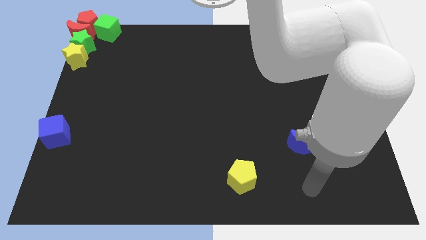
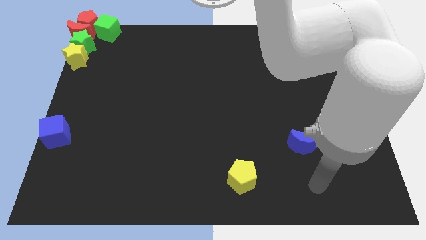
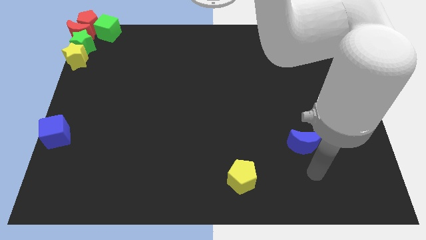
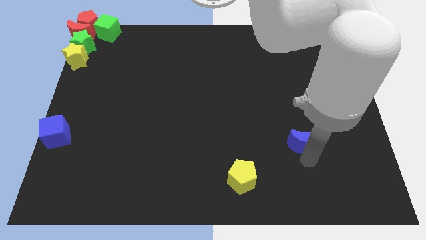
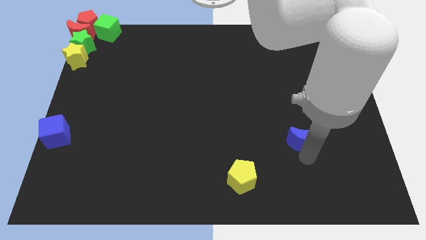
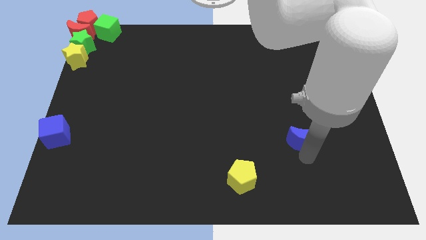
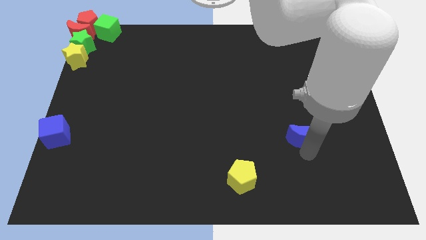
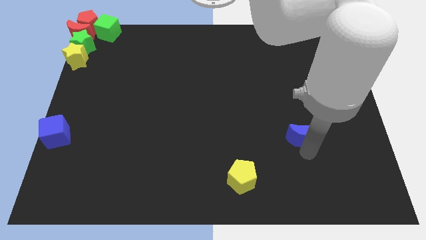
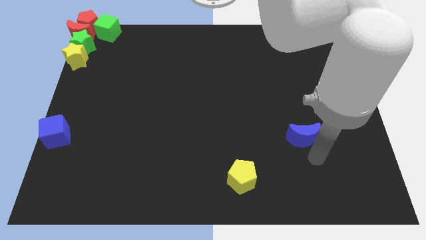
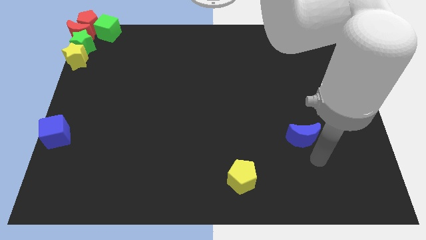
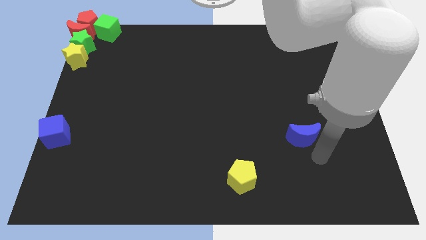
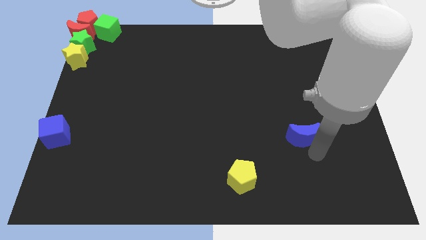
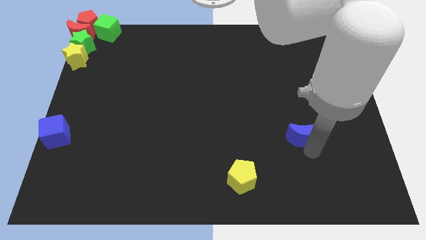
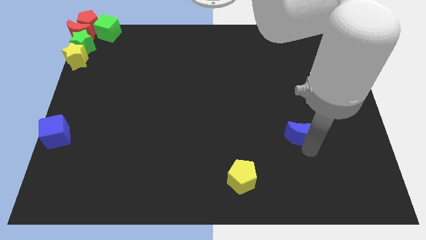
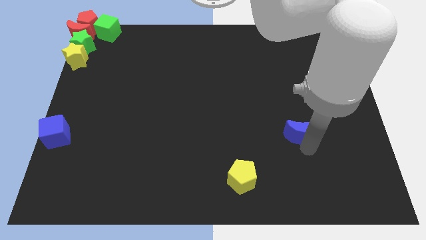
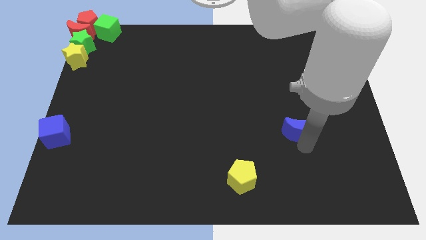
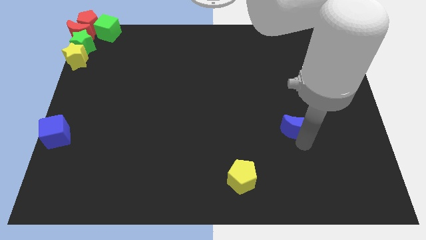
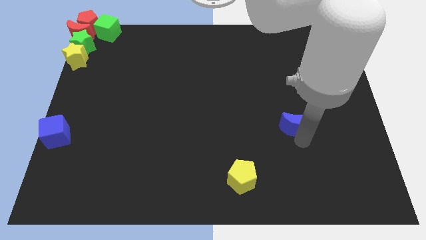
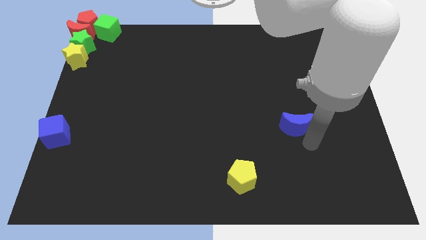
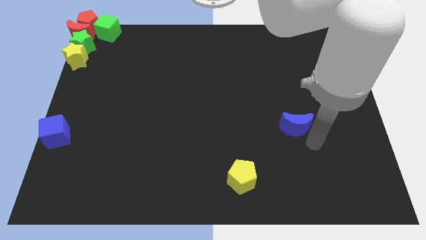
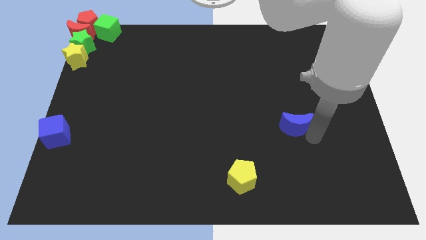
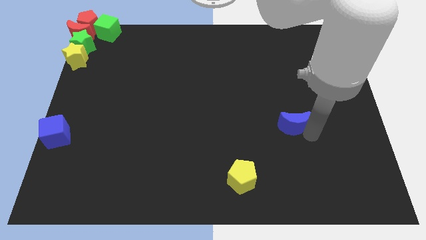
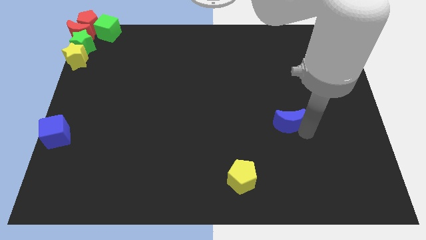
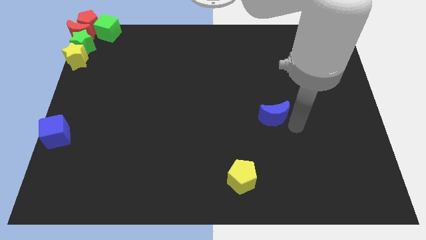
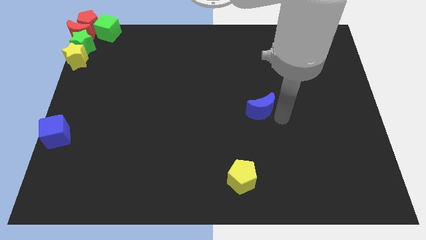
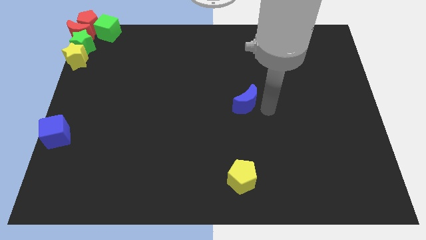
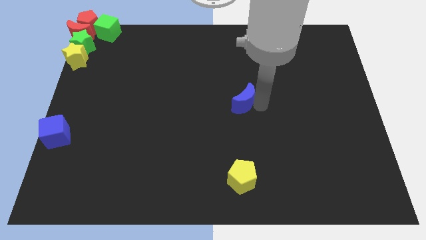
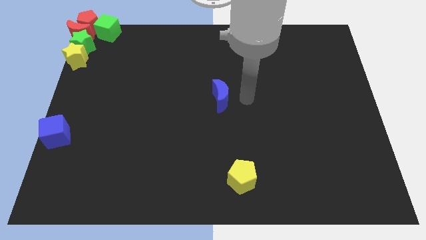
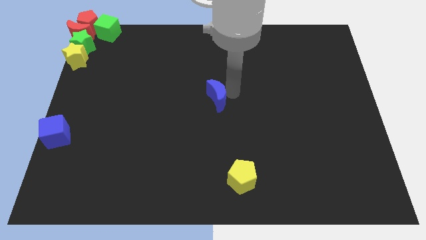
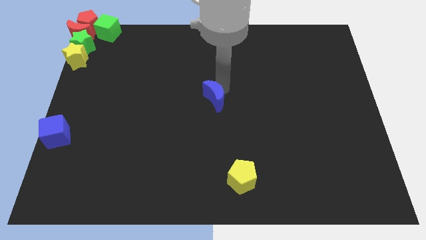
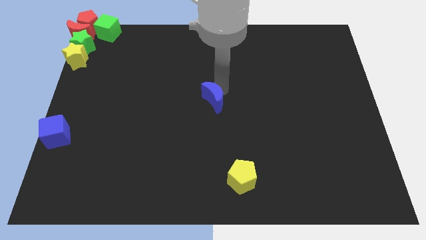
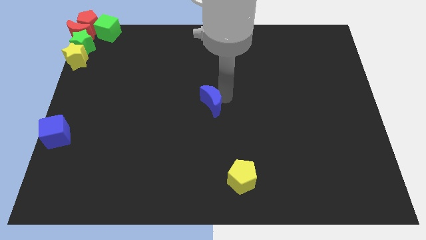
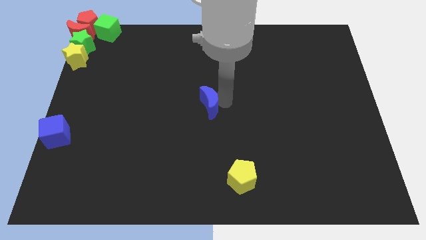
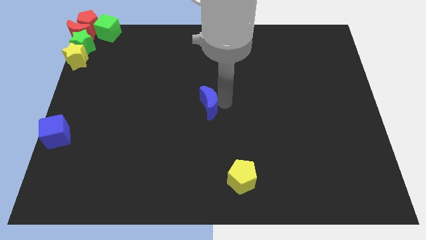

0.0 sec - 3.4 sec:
move the blue crescent to the center of the board

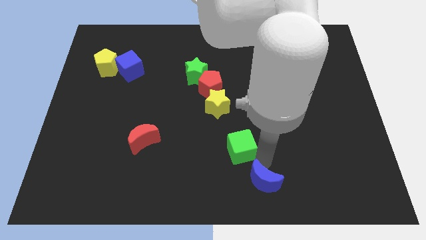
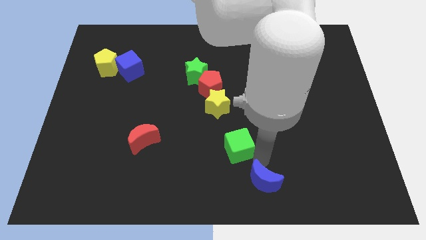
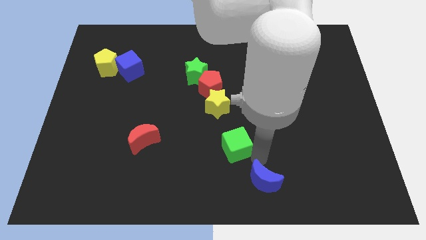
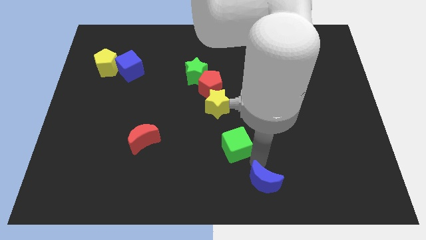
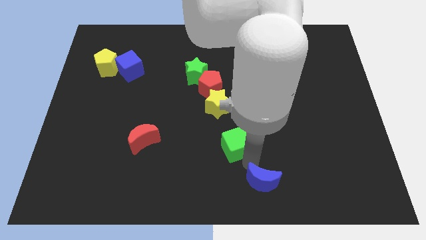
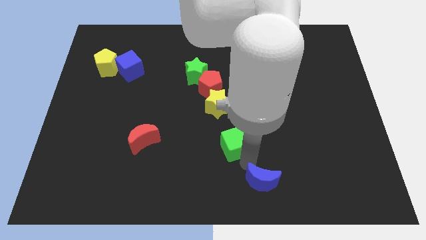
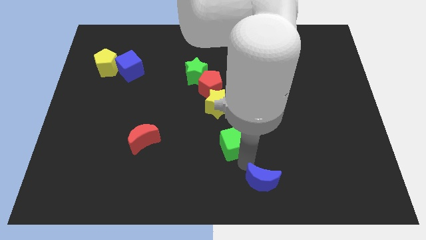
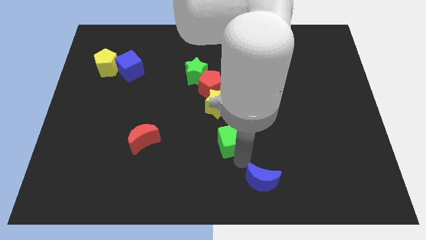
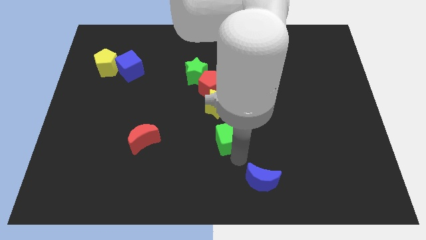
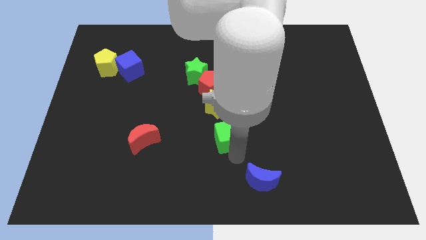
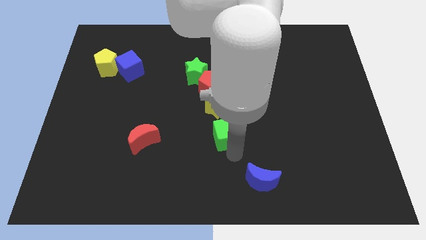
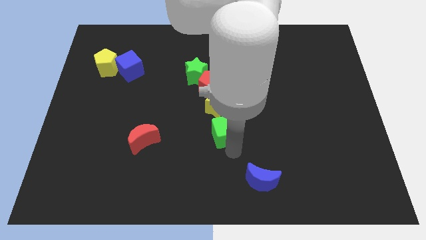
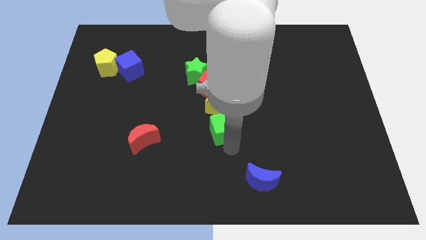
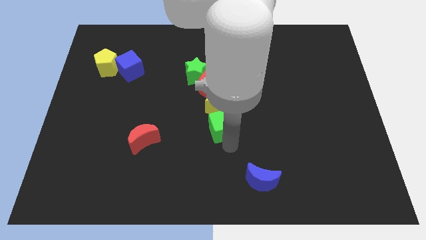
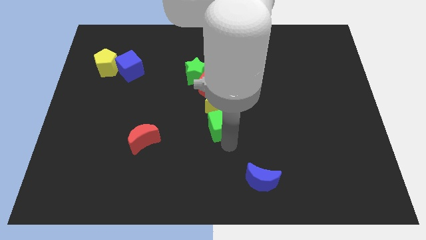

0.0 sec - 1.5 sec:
place the green cube below the yellow star

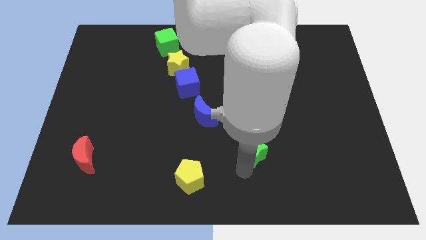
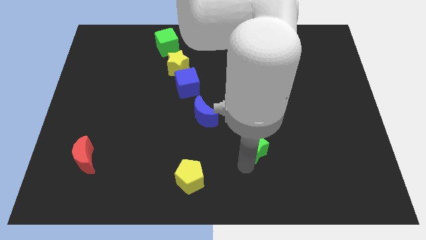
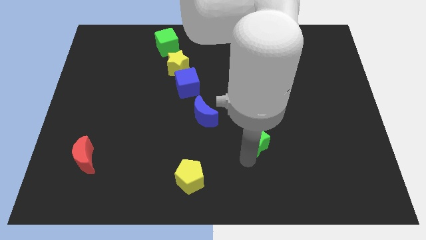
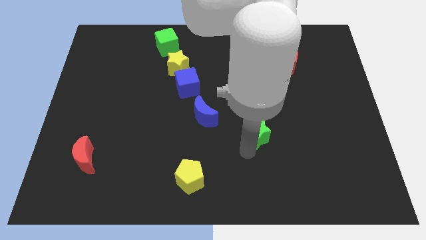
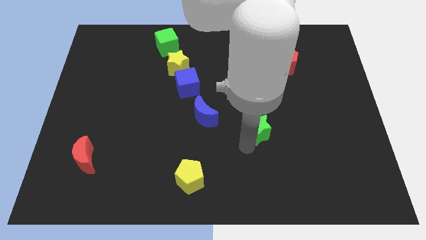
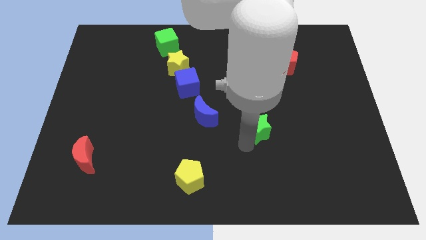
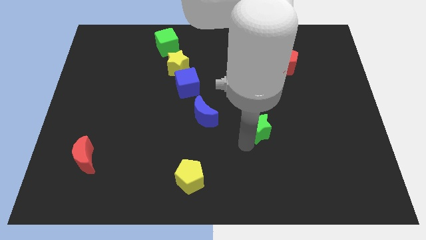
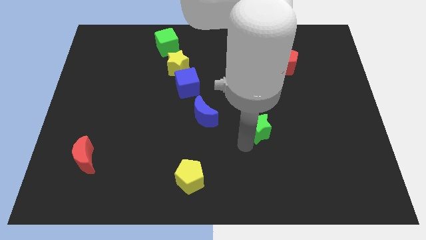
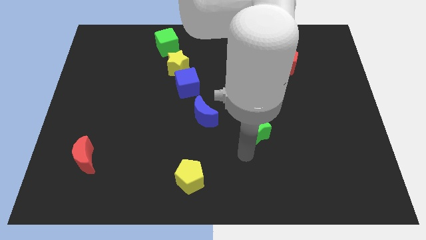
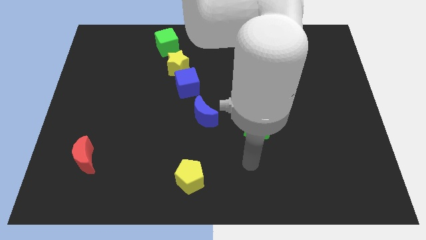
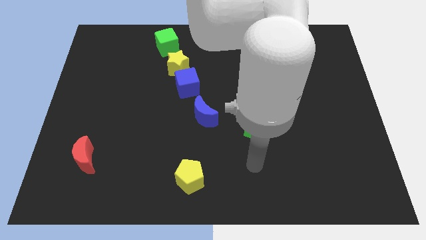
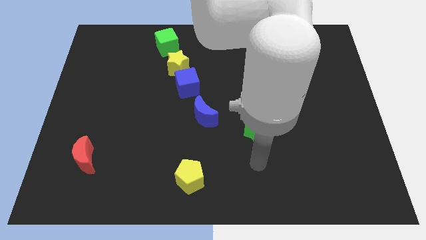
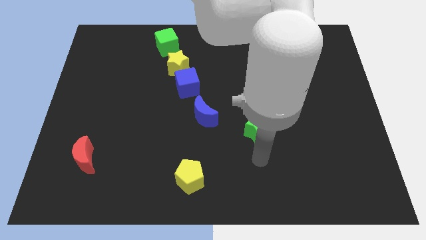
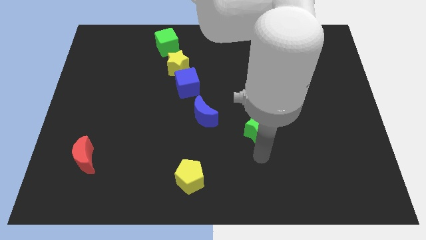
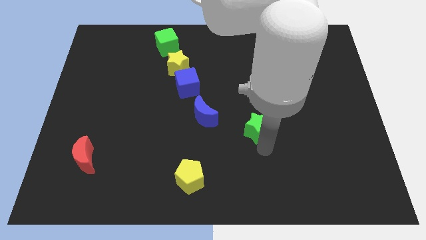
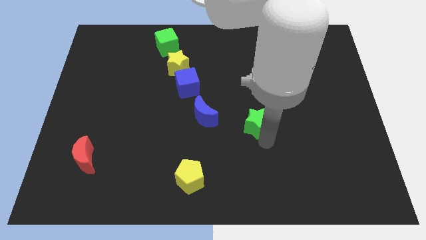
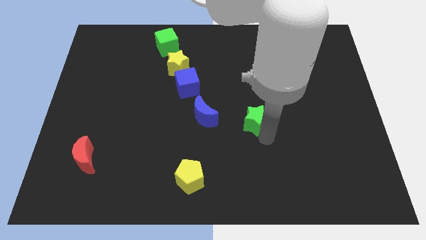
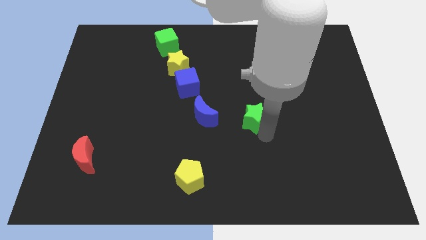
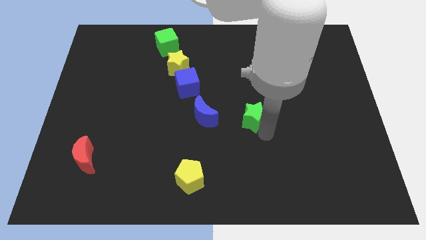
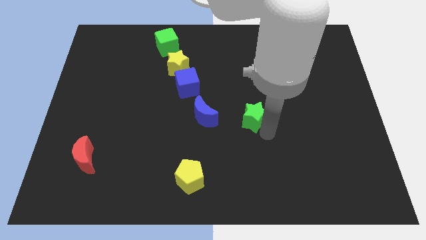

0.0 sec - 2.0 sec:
move the green star to the right of the blue crescent

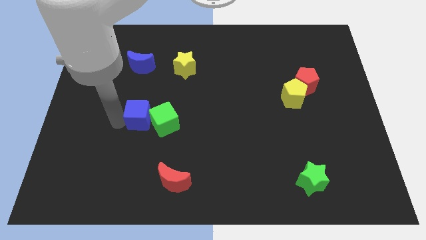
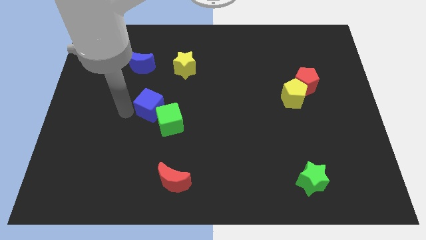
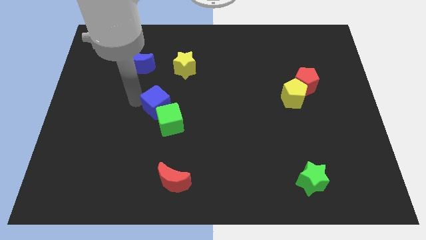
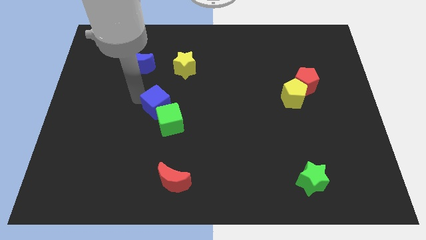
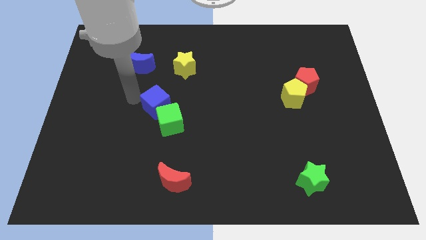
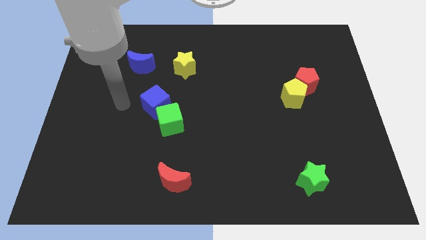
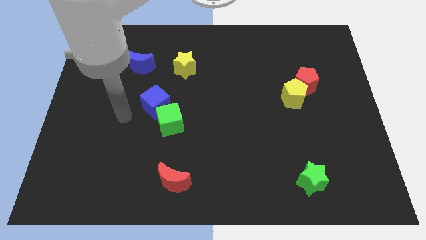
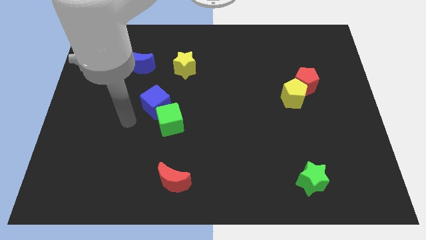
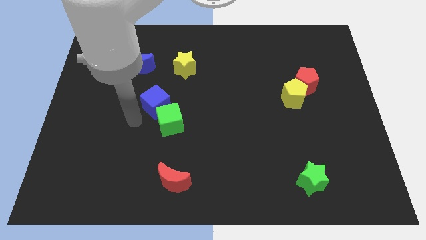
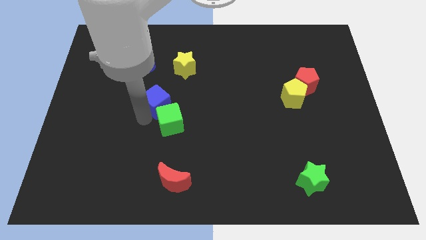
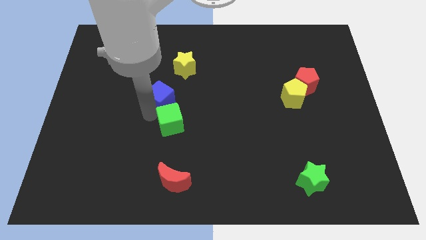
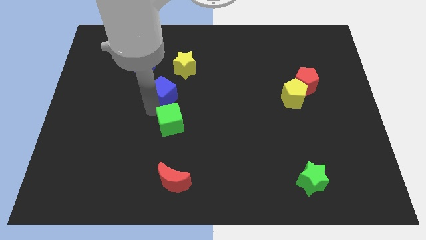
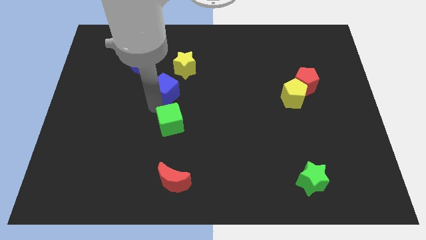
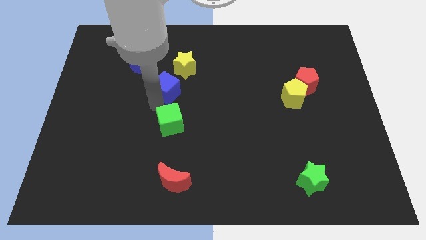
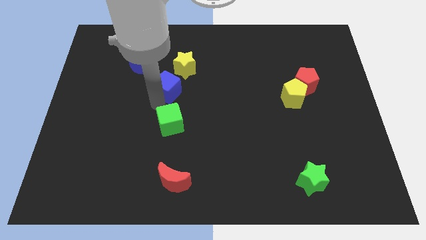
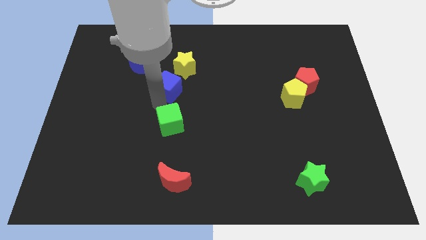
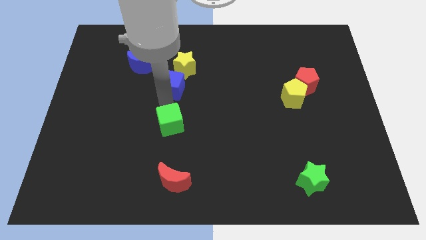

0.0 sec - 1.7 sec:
place blue cube to the top of the green cube

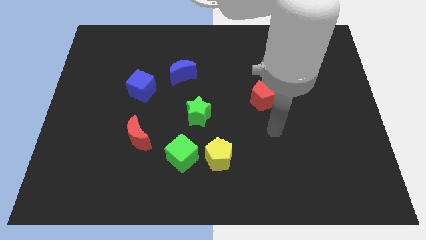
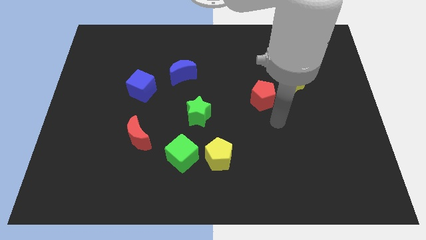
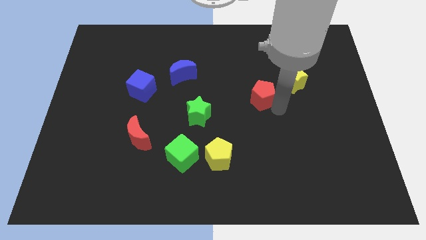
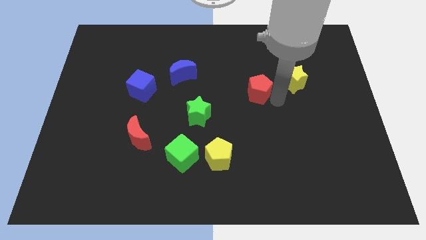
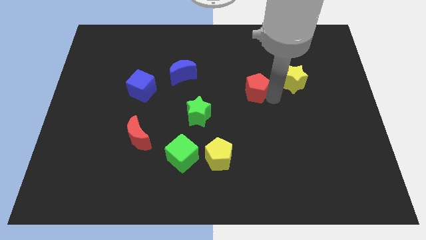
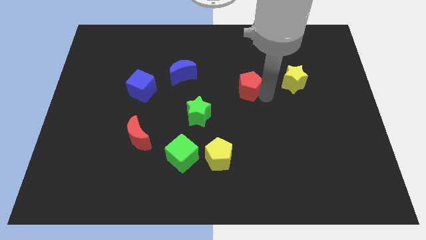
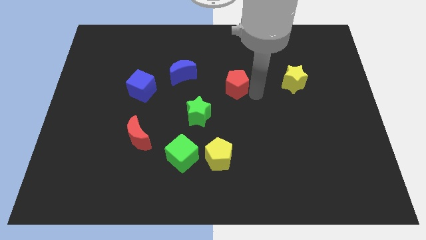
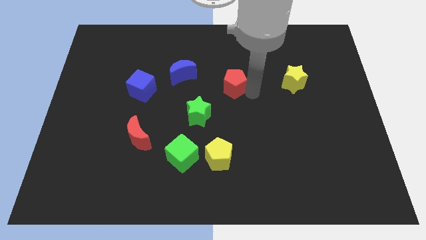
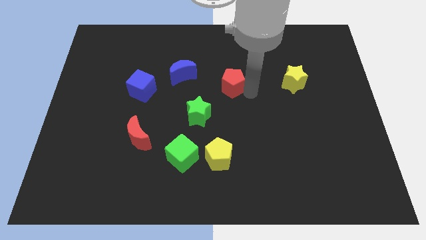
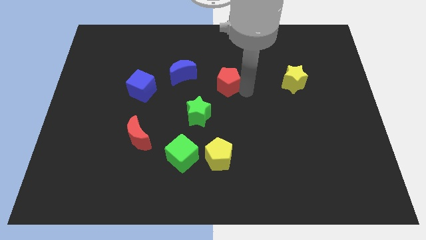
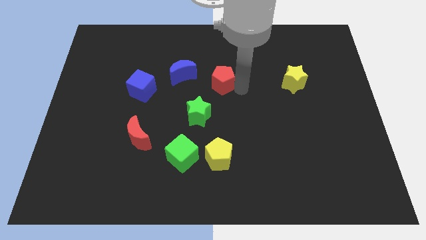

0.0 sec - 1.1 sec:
put the red pentagon near the blue crescent
